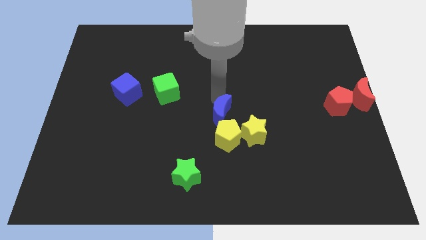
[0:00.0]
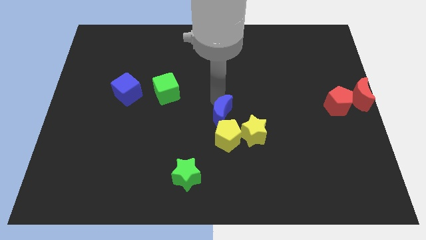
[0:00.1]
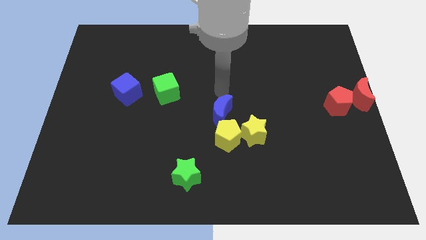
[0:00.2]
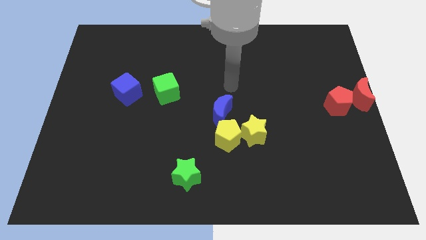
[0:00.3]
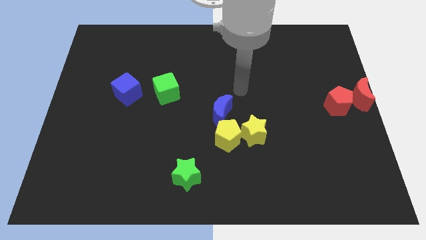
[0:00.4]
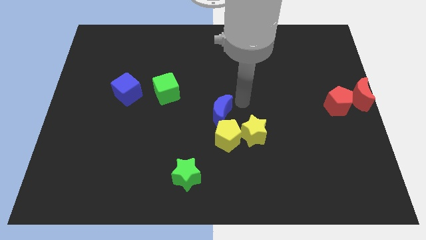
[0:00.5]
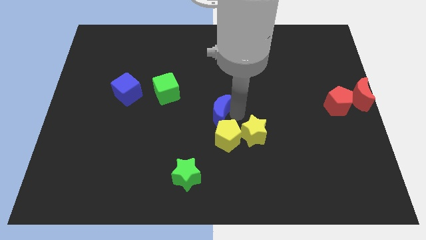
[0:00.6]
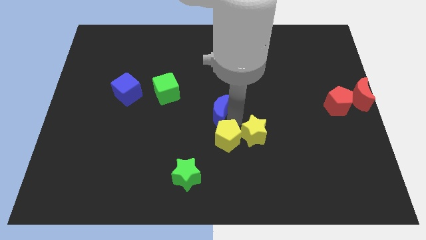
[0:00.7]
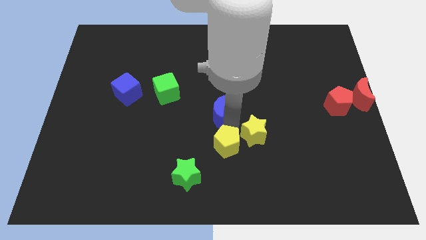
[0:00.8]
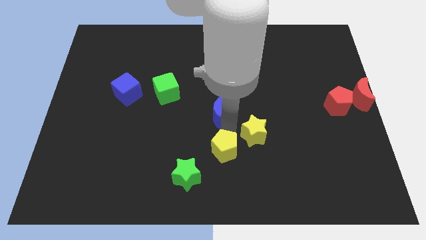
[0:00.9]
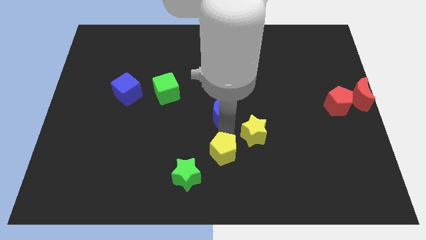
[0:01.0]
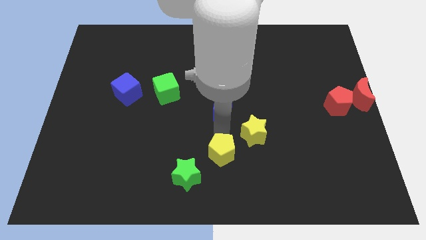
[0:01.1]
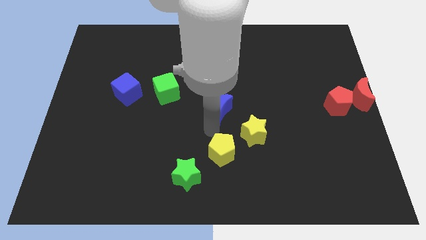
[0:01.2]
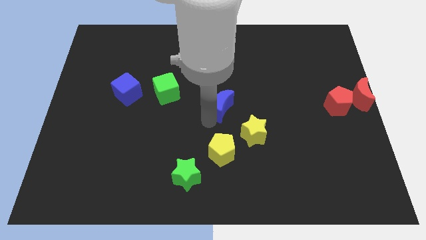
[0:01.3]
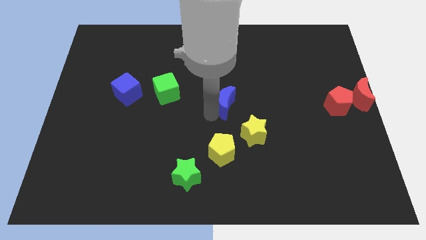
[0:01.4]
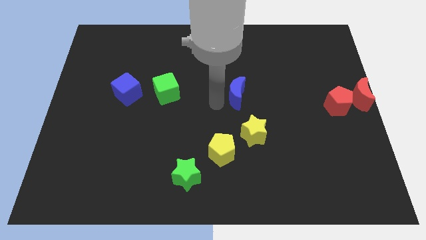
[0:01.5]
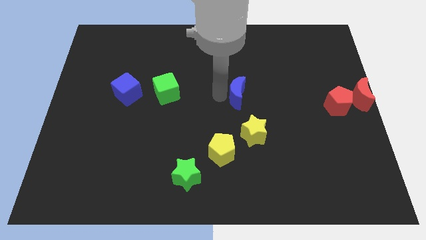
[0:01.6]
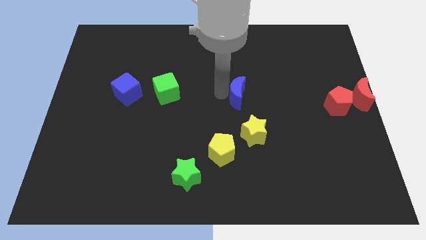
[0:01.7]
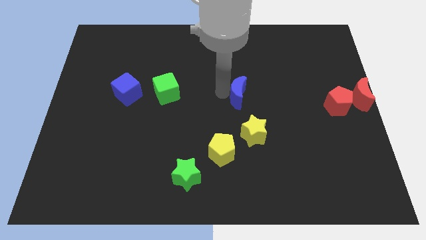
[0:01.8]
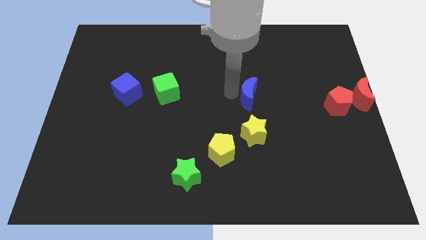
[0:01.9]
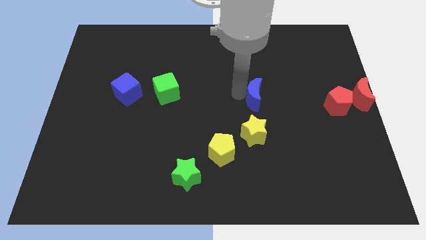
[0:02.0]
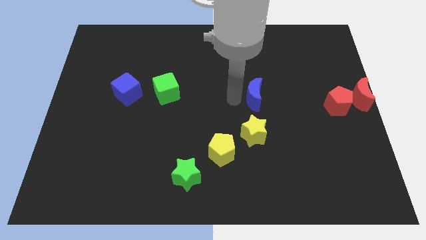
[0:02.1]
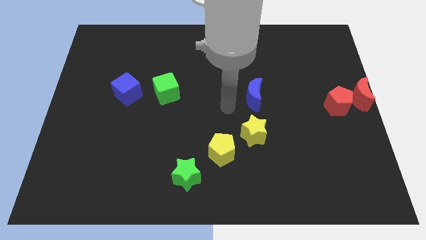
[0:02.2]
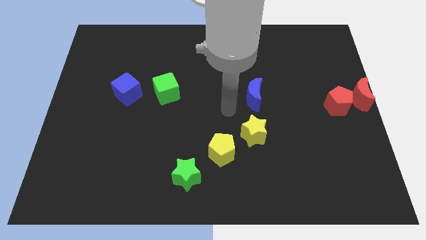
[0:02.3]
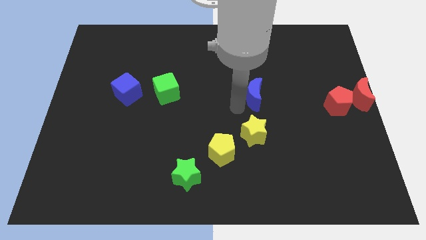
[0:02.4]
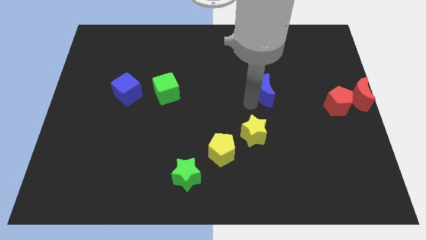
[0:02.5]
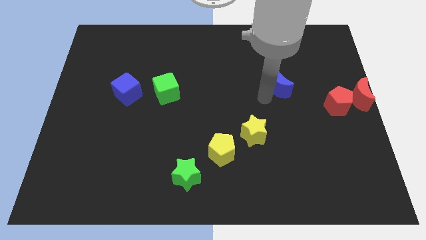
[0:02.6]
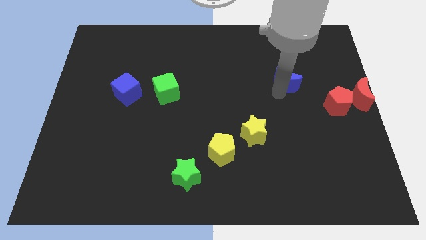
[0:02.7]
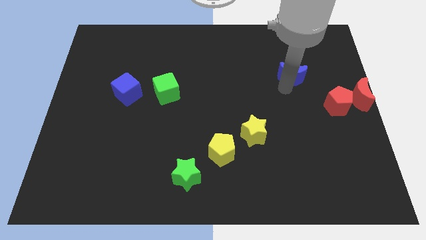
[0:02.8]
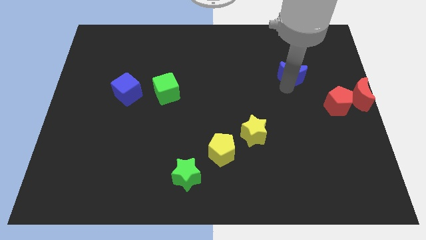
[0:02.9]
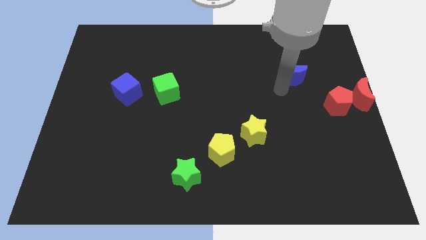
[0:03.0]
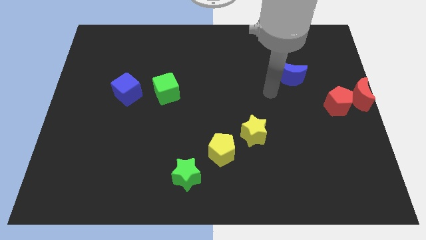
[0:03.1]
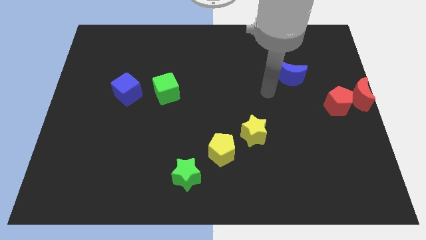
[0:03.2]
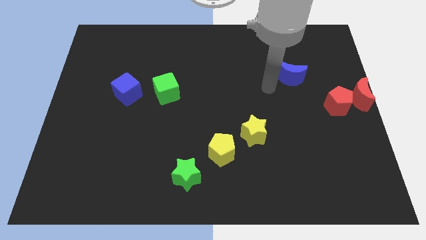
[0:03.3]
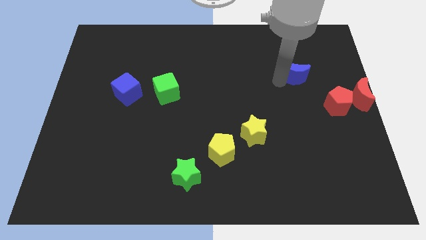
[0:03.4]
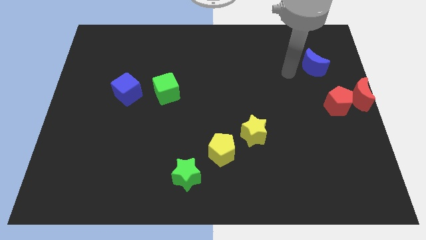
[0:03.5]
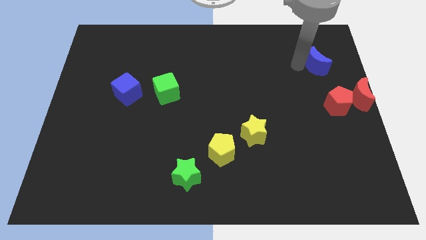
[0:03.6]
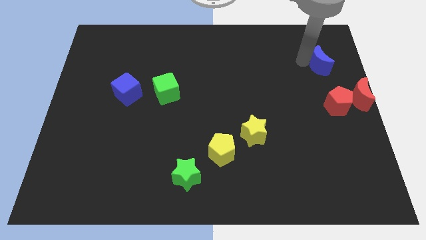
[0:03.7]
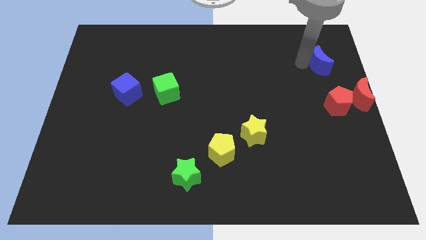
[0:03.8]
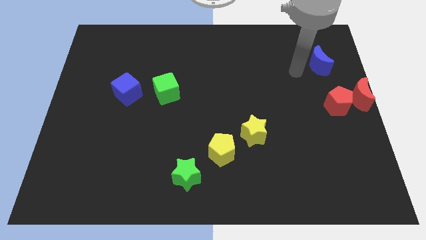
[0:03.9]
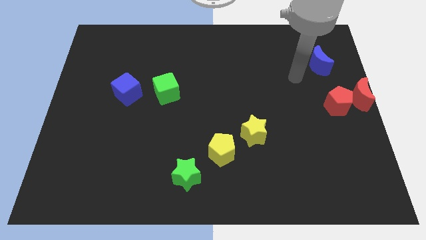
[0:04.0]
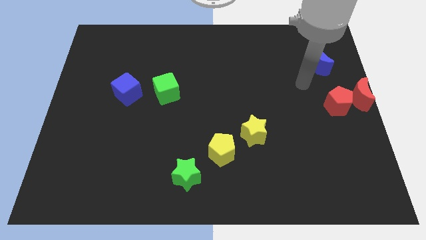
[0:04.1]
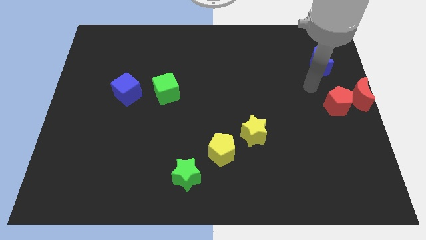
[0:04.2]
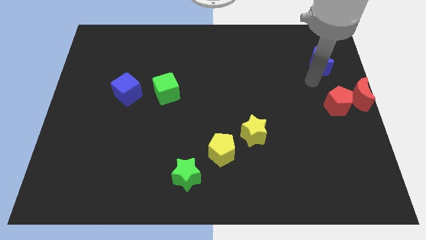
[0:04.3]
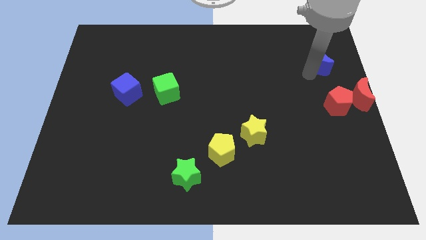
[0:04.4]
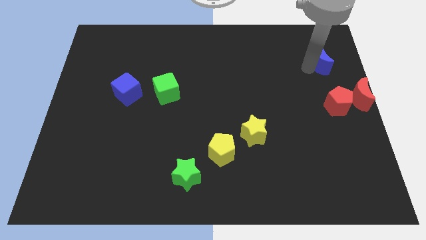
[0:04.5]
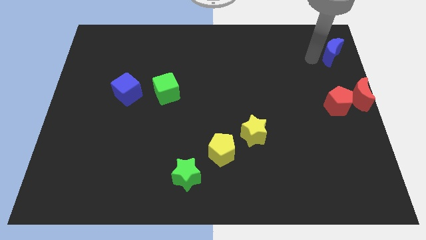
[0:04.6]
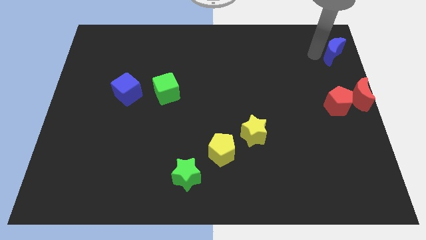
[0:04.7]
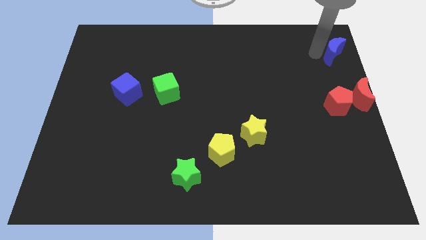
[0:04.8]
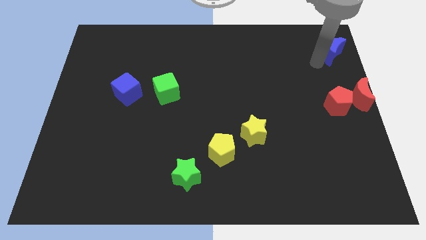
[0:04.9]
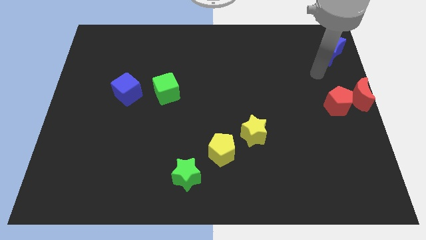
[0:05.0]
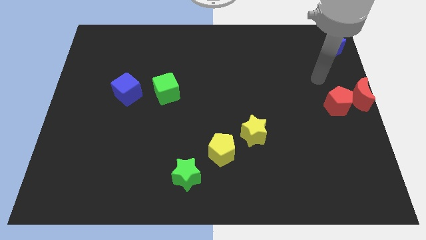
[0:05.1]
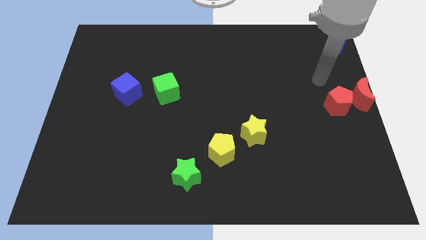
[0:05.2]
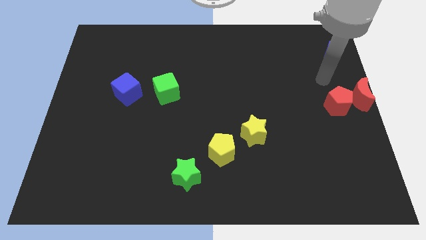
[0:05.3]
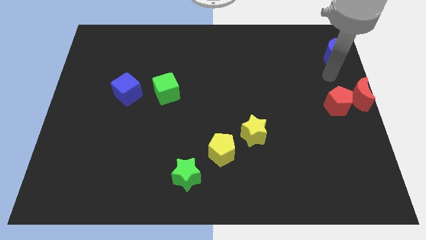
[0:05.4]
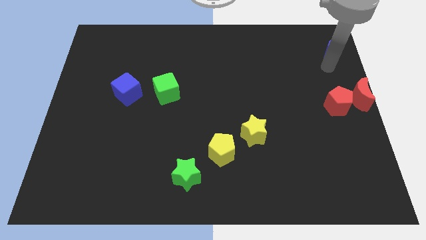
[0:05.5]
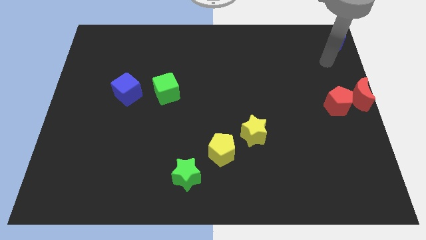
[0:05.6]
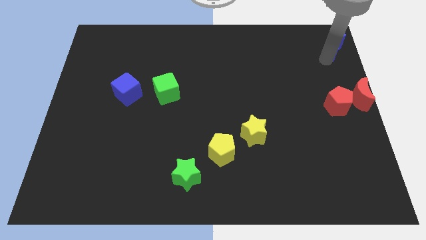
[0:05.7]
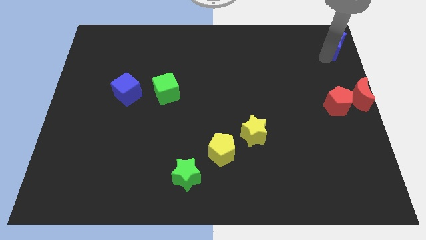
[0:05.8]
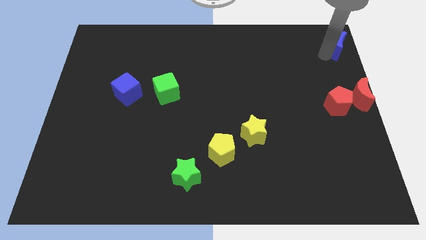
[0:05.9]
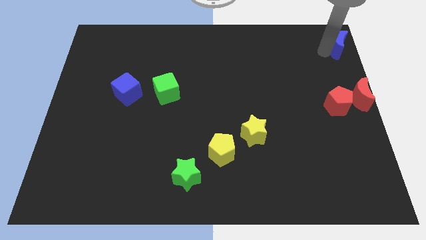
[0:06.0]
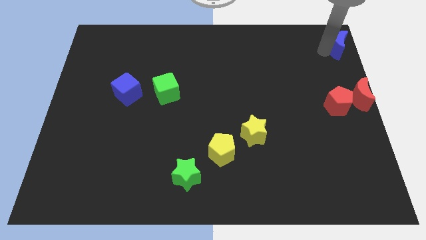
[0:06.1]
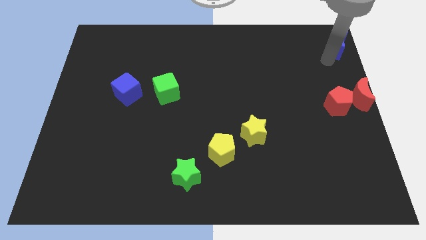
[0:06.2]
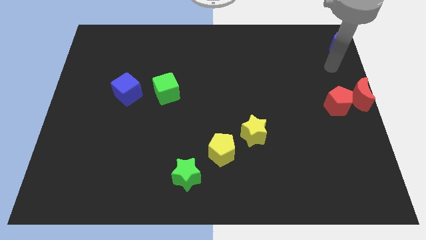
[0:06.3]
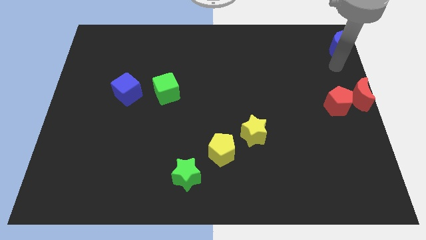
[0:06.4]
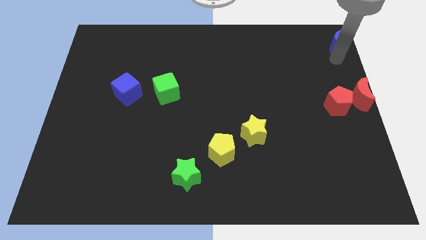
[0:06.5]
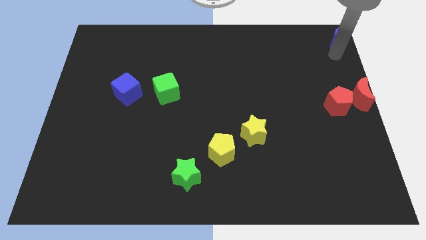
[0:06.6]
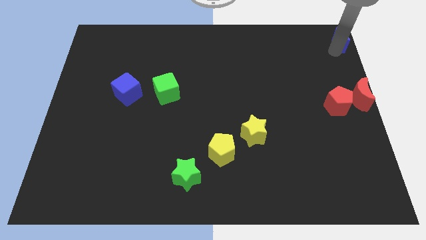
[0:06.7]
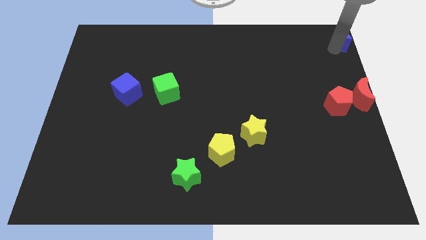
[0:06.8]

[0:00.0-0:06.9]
slide the blue moon into the top right corner

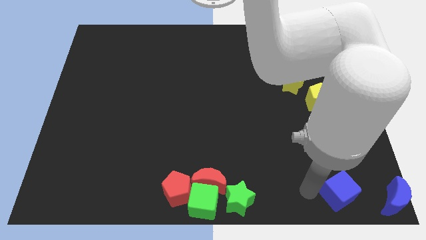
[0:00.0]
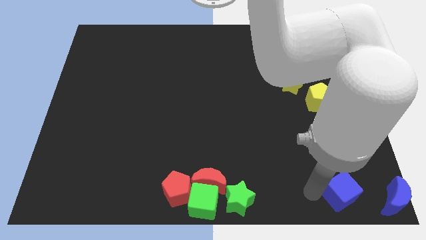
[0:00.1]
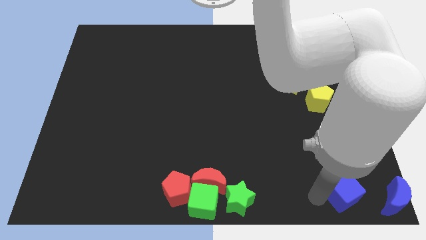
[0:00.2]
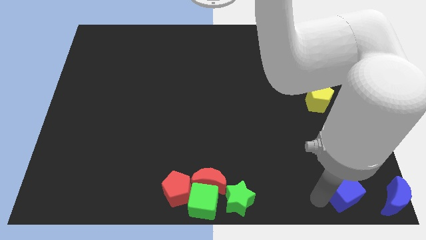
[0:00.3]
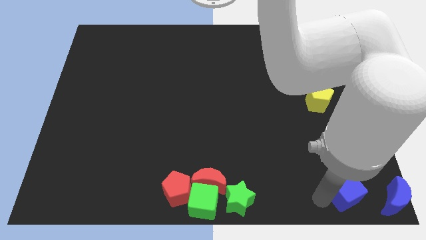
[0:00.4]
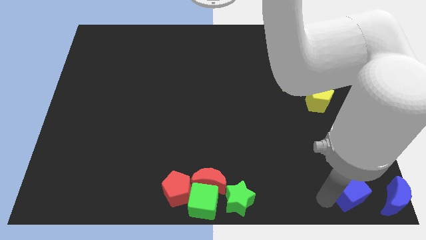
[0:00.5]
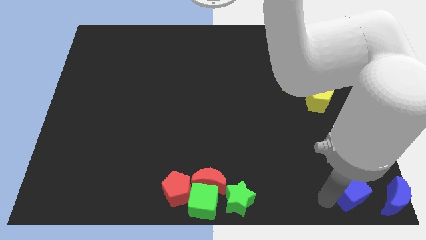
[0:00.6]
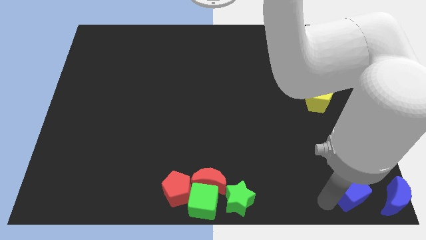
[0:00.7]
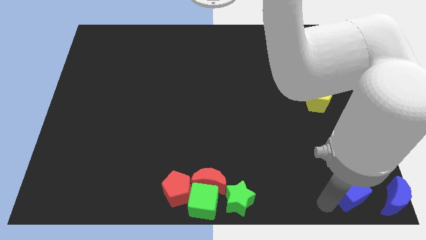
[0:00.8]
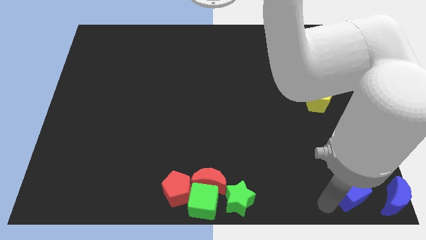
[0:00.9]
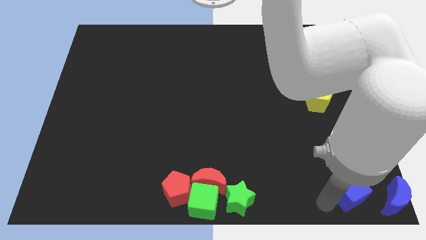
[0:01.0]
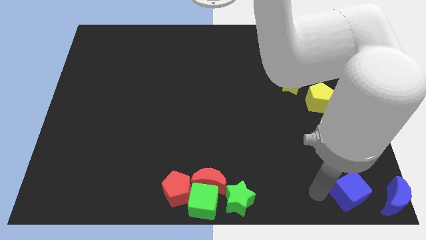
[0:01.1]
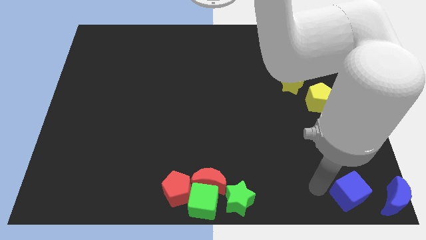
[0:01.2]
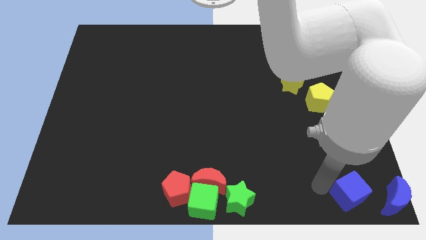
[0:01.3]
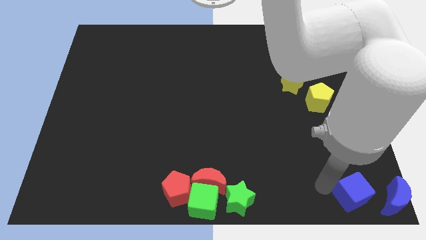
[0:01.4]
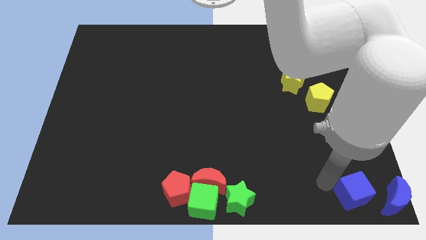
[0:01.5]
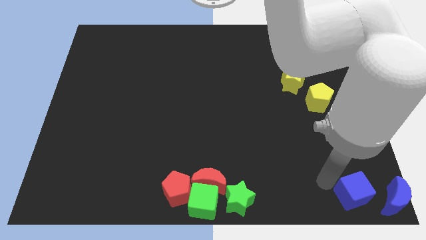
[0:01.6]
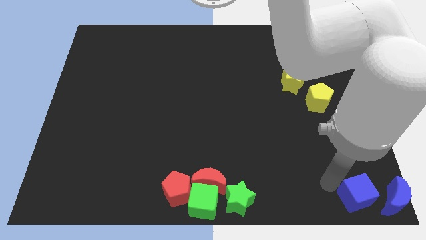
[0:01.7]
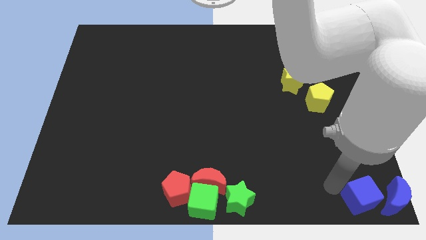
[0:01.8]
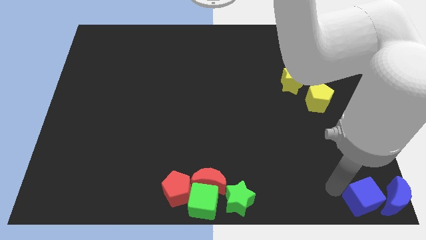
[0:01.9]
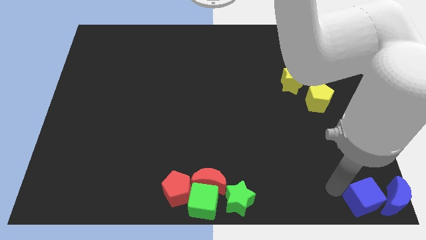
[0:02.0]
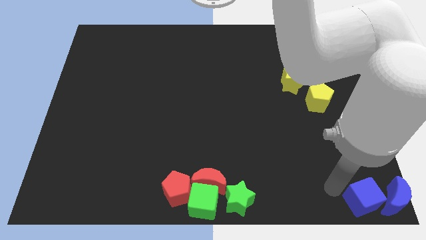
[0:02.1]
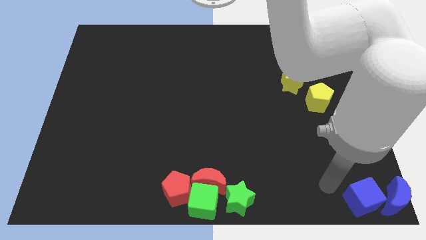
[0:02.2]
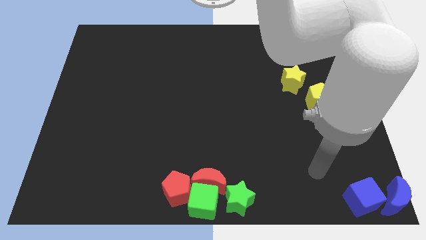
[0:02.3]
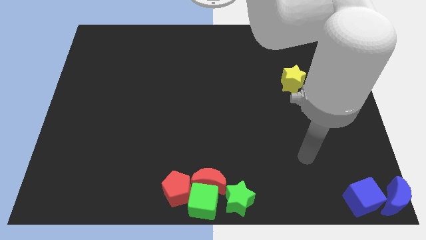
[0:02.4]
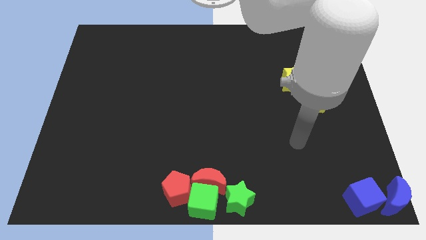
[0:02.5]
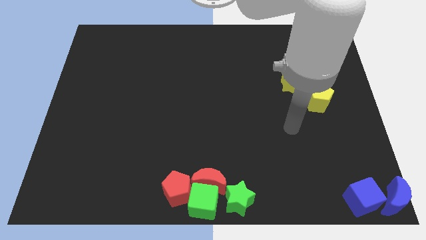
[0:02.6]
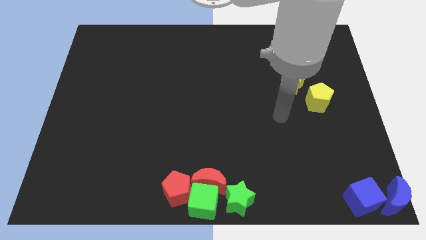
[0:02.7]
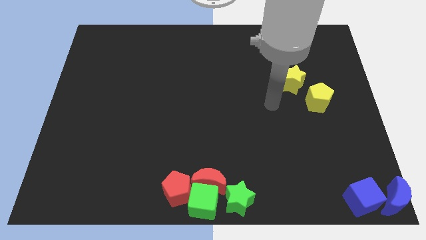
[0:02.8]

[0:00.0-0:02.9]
slide the blue cube close to the blue moon
